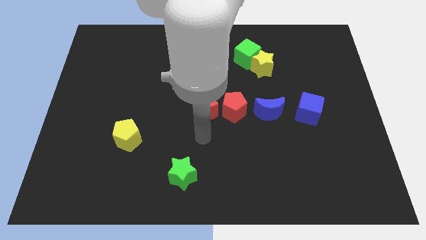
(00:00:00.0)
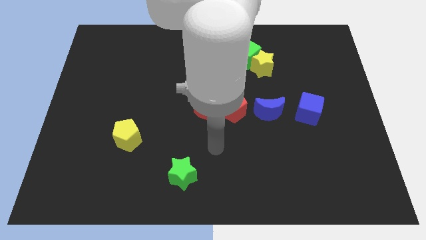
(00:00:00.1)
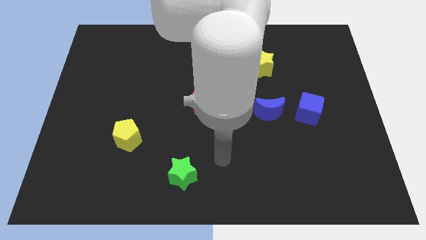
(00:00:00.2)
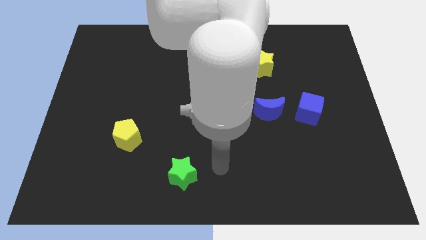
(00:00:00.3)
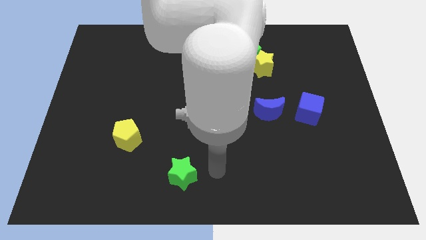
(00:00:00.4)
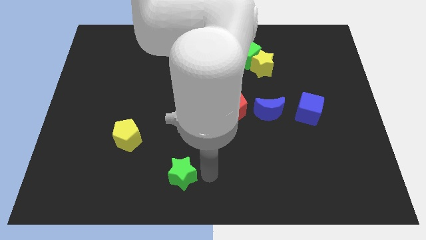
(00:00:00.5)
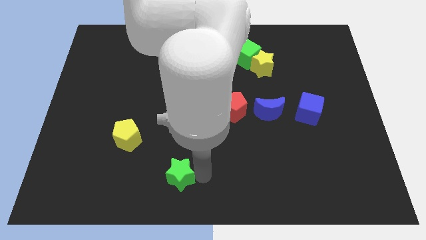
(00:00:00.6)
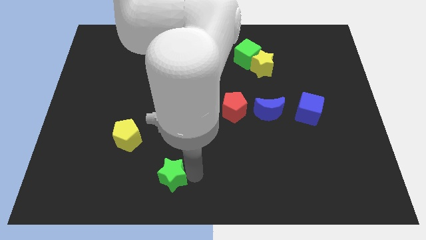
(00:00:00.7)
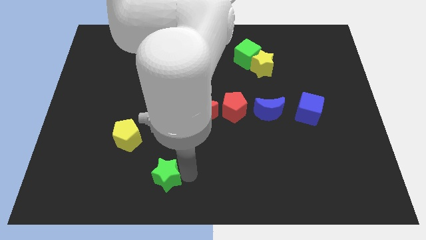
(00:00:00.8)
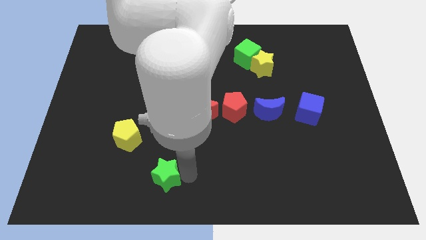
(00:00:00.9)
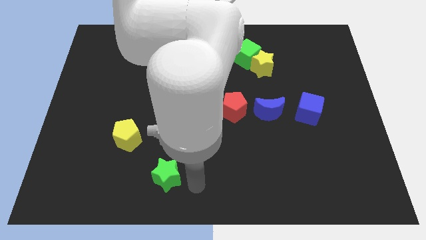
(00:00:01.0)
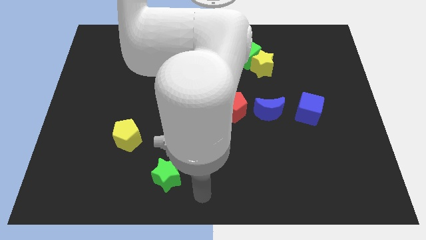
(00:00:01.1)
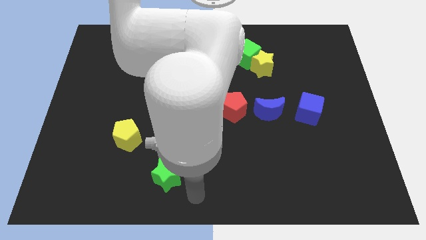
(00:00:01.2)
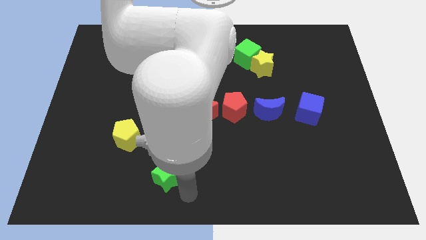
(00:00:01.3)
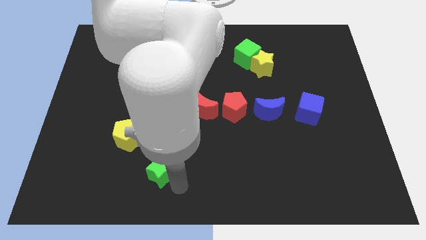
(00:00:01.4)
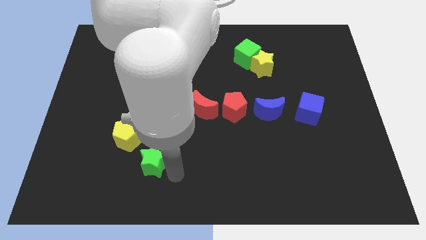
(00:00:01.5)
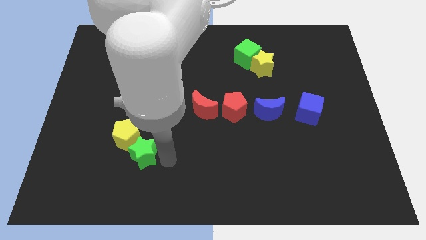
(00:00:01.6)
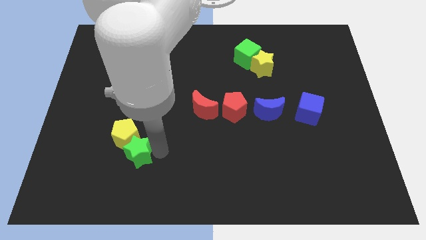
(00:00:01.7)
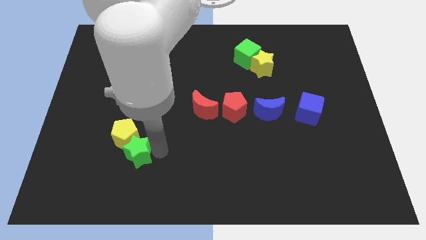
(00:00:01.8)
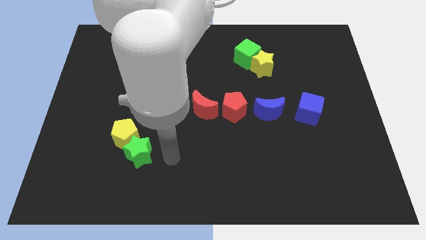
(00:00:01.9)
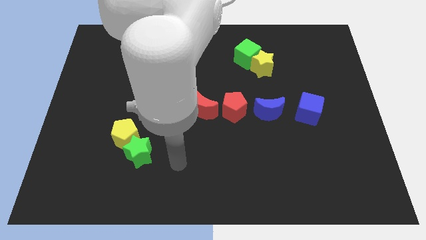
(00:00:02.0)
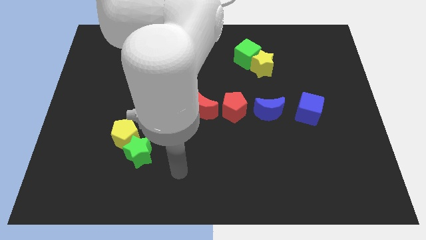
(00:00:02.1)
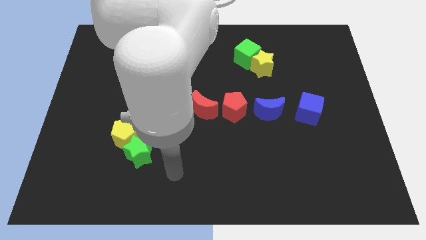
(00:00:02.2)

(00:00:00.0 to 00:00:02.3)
push the green star into the yellow pentagon

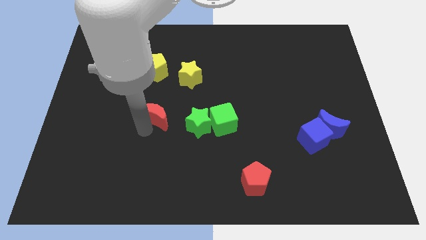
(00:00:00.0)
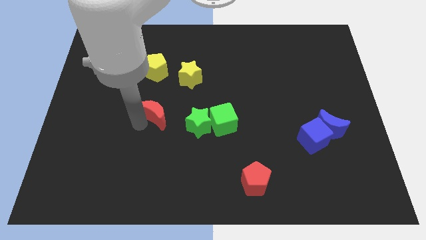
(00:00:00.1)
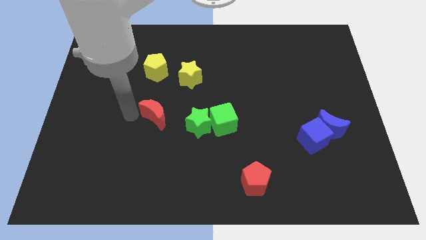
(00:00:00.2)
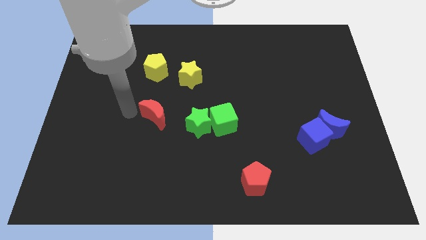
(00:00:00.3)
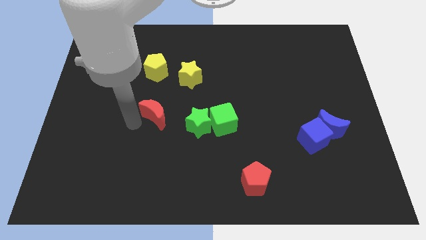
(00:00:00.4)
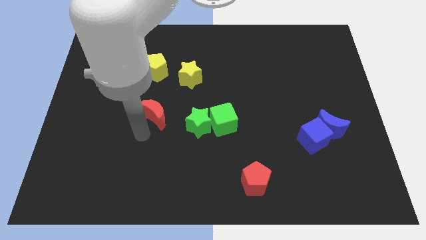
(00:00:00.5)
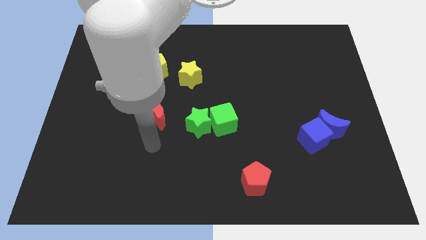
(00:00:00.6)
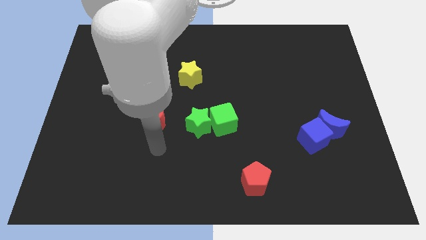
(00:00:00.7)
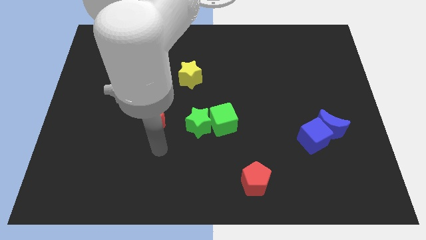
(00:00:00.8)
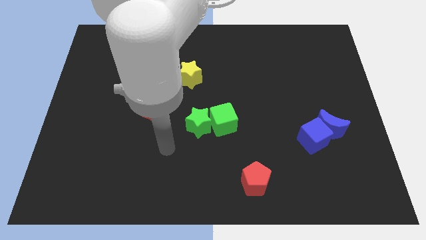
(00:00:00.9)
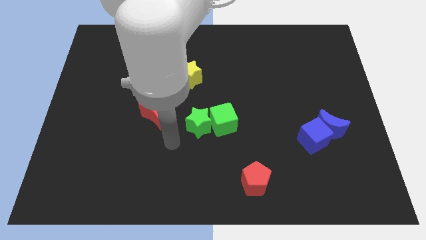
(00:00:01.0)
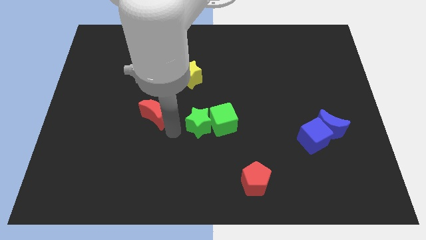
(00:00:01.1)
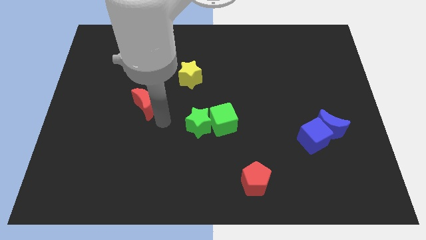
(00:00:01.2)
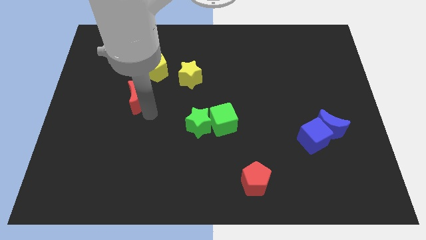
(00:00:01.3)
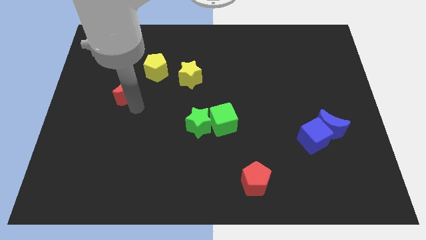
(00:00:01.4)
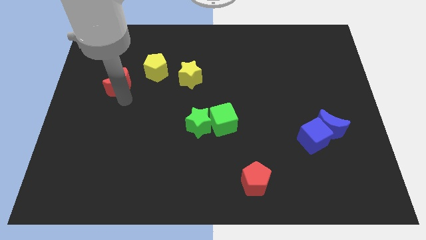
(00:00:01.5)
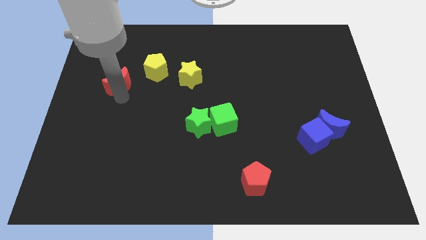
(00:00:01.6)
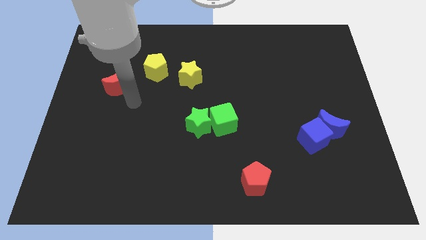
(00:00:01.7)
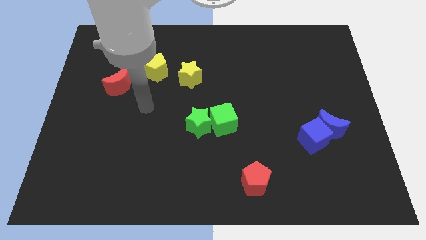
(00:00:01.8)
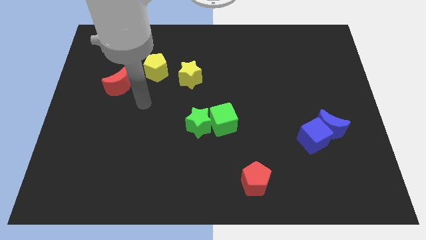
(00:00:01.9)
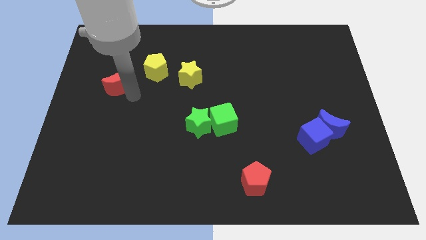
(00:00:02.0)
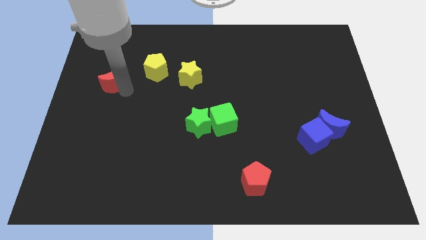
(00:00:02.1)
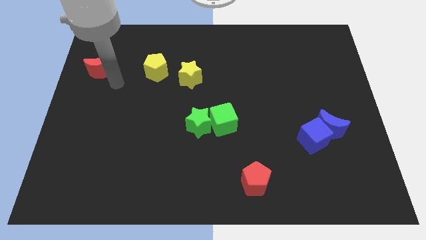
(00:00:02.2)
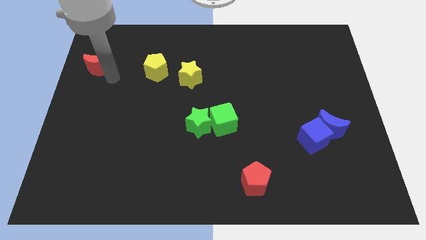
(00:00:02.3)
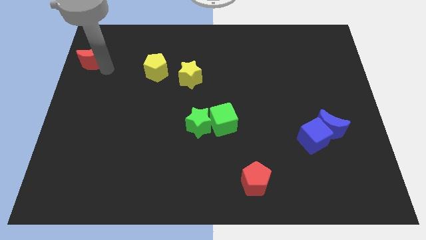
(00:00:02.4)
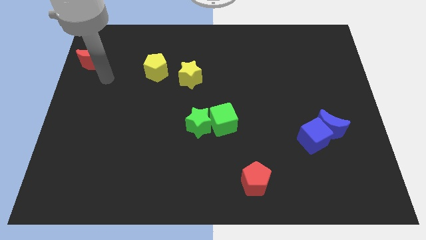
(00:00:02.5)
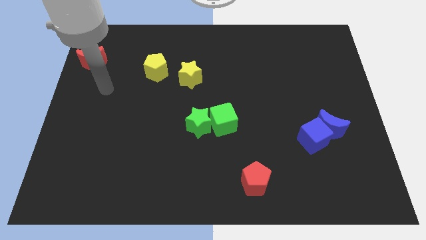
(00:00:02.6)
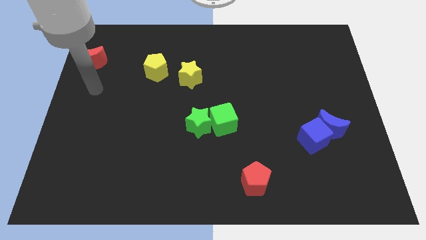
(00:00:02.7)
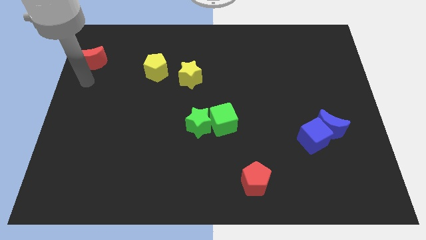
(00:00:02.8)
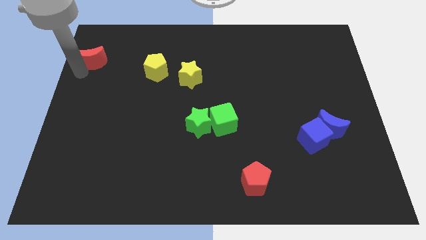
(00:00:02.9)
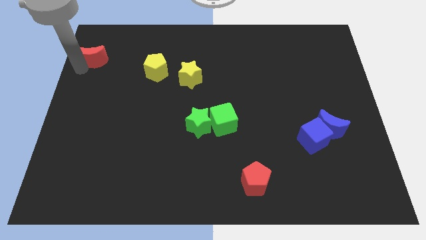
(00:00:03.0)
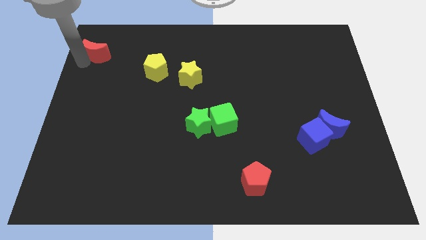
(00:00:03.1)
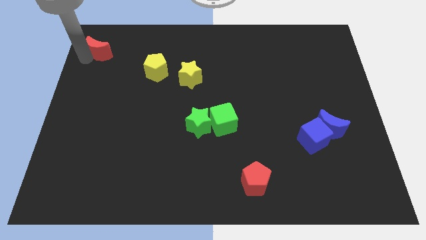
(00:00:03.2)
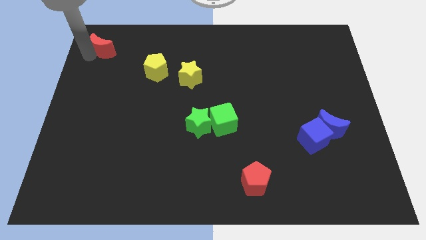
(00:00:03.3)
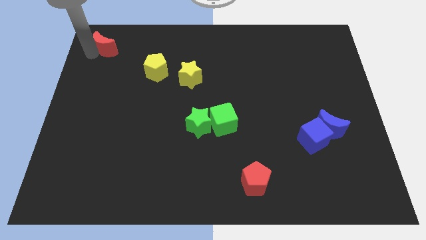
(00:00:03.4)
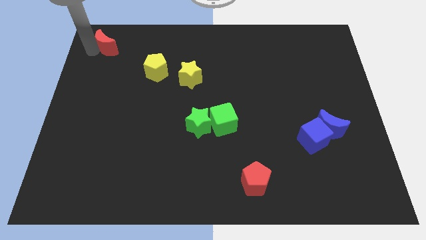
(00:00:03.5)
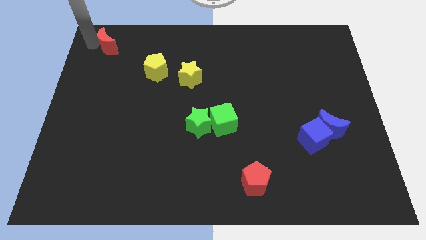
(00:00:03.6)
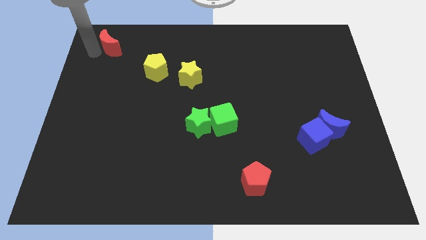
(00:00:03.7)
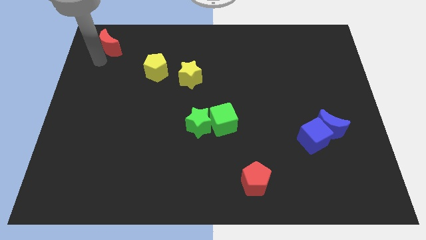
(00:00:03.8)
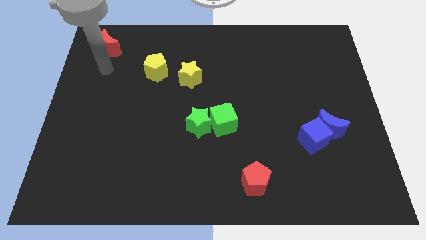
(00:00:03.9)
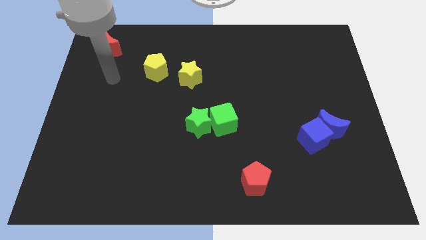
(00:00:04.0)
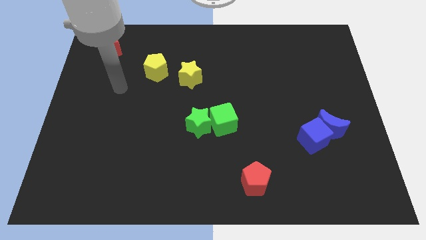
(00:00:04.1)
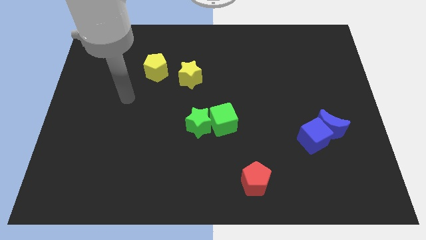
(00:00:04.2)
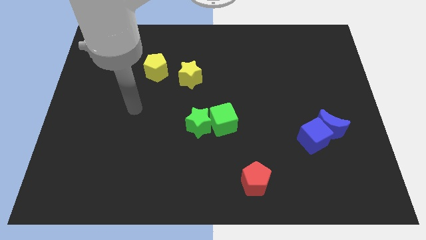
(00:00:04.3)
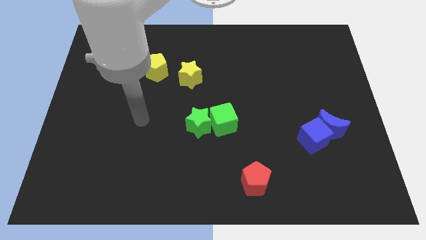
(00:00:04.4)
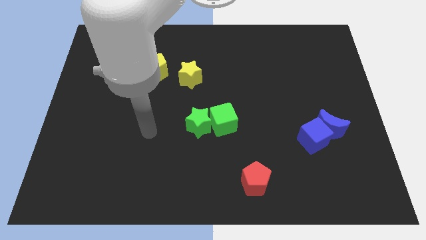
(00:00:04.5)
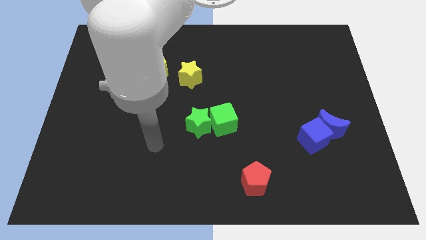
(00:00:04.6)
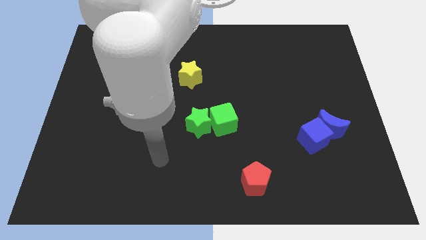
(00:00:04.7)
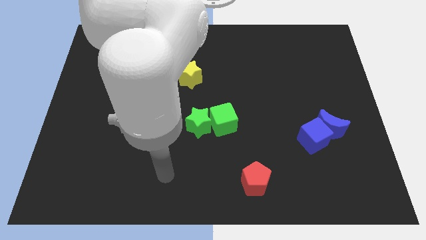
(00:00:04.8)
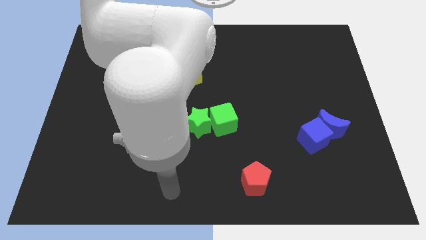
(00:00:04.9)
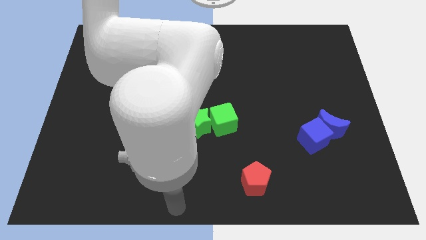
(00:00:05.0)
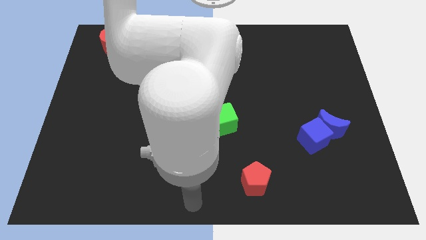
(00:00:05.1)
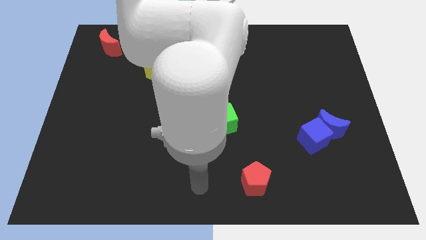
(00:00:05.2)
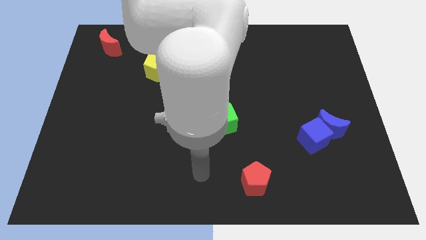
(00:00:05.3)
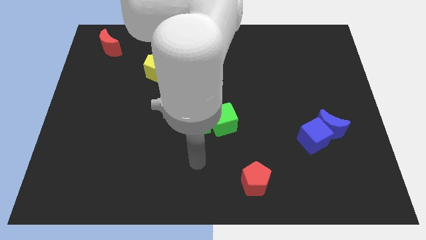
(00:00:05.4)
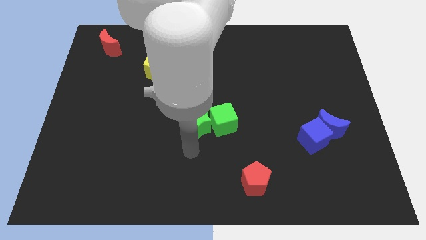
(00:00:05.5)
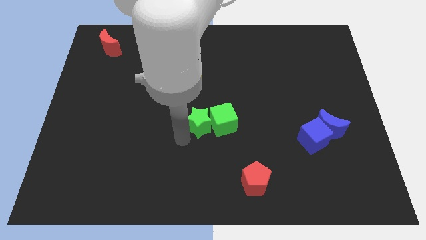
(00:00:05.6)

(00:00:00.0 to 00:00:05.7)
move your arm towards the left bottom side of the green cube

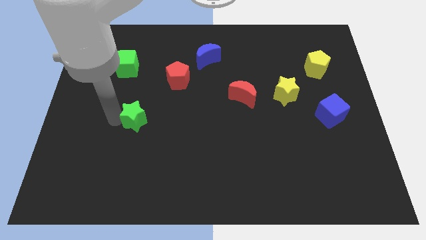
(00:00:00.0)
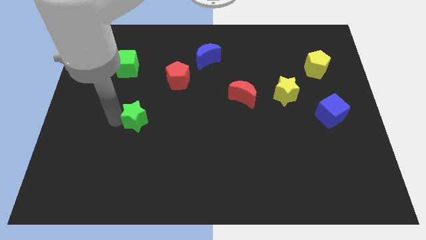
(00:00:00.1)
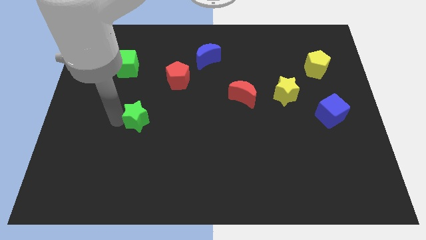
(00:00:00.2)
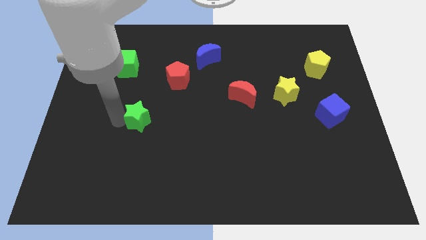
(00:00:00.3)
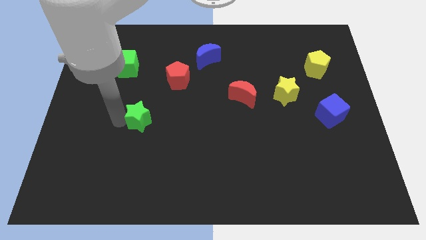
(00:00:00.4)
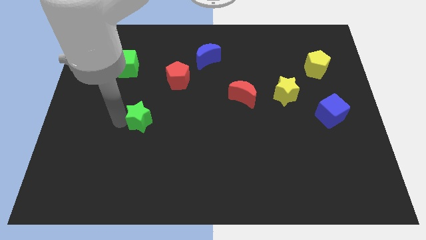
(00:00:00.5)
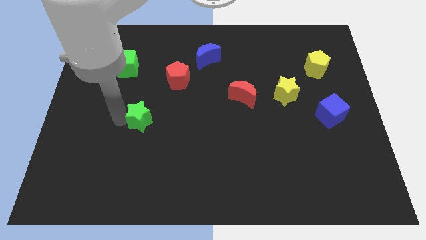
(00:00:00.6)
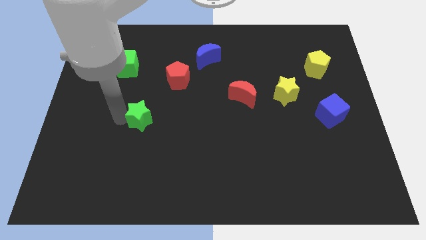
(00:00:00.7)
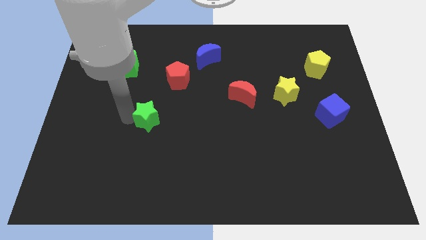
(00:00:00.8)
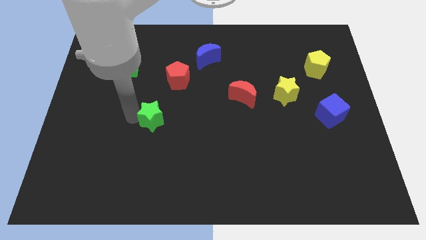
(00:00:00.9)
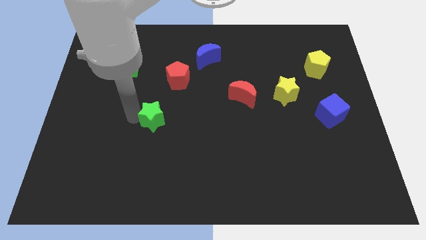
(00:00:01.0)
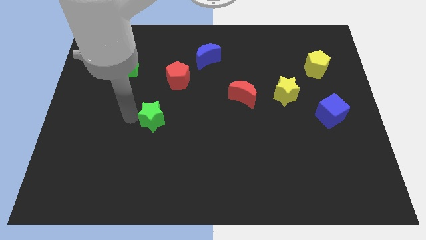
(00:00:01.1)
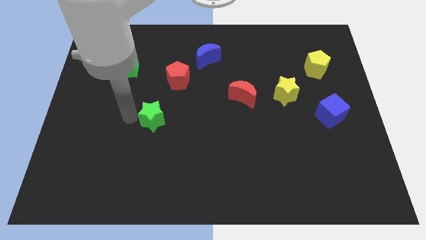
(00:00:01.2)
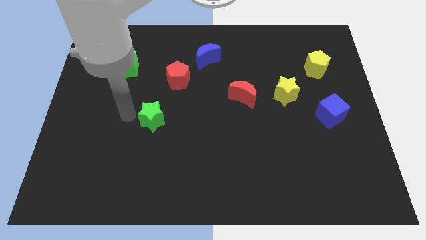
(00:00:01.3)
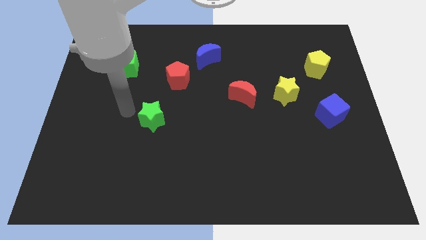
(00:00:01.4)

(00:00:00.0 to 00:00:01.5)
move the green star slightly to the the right
